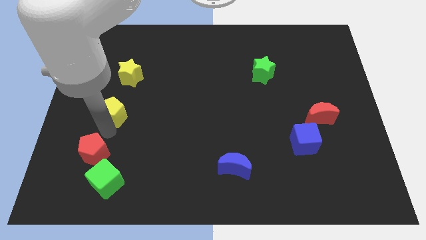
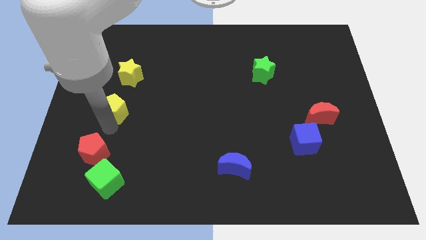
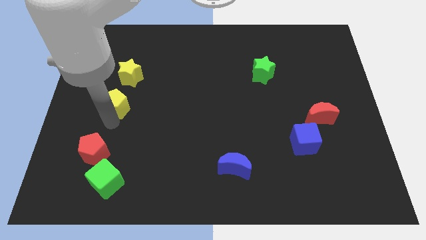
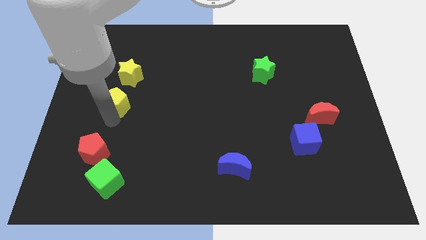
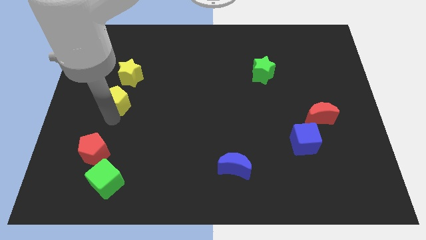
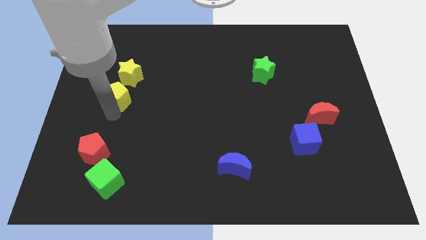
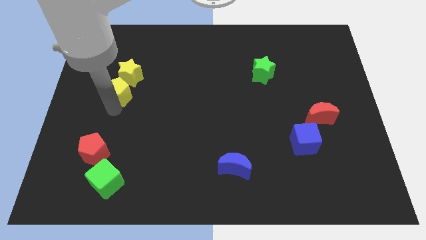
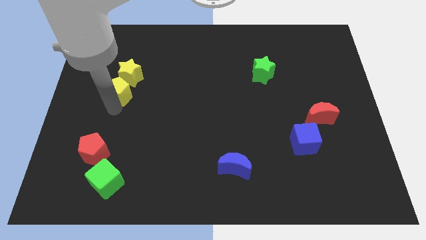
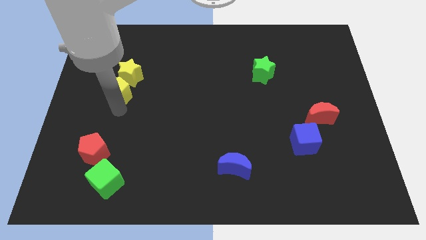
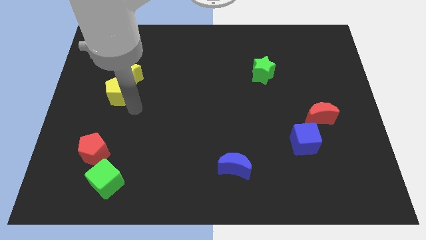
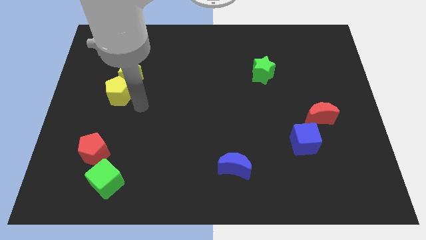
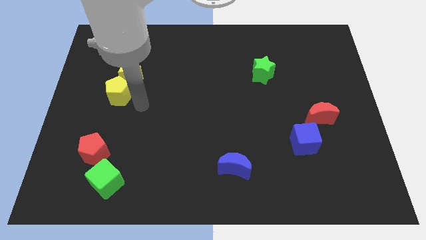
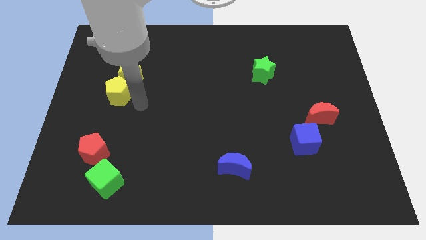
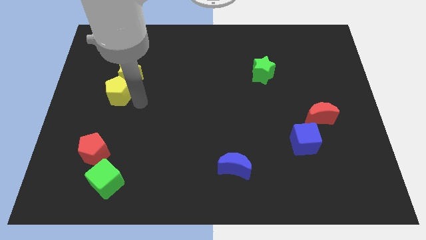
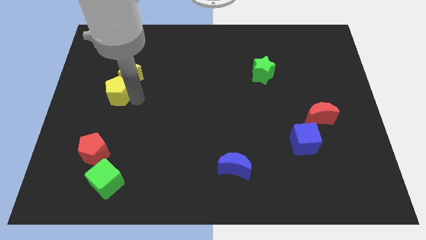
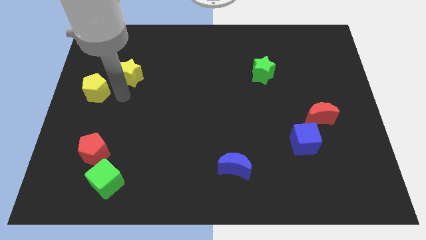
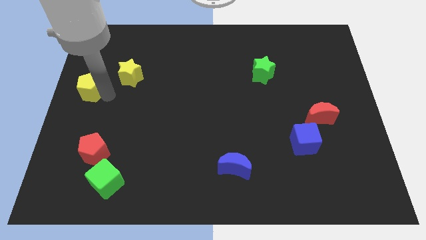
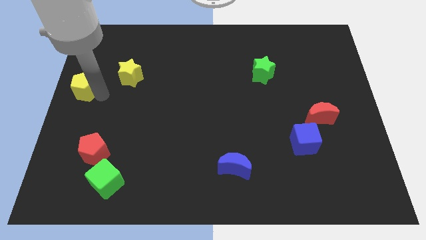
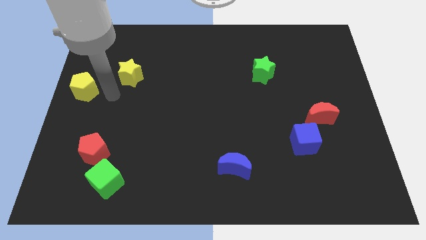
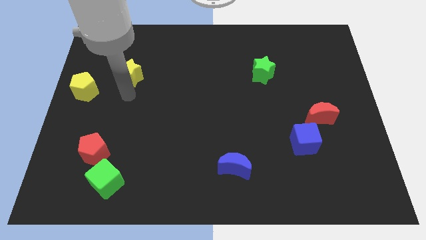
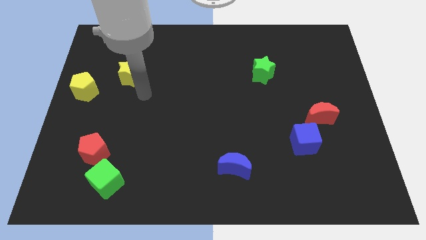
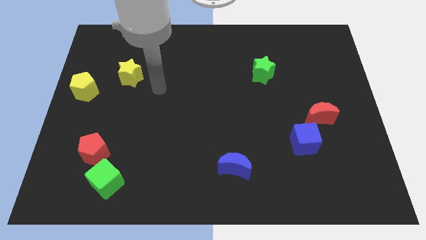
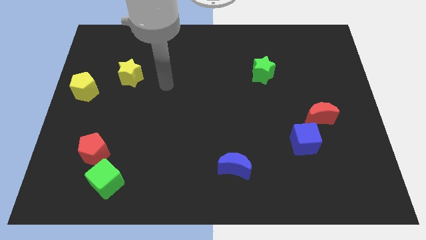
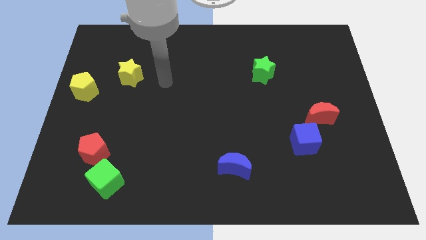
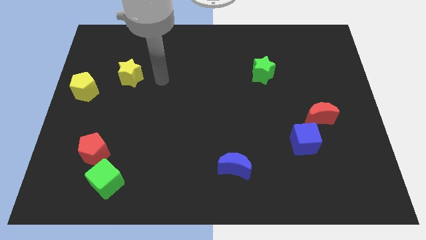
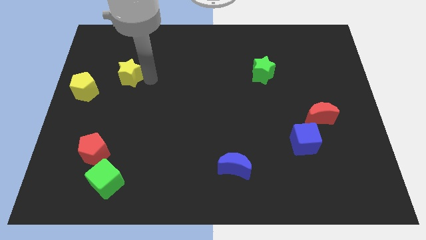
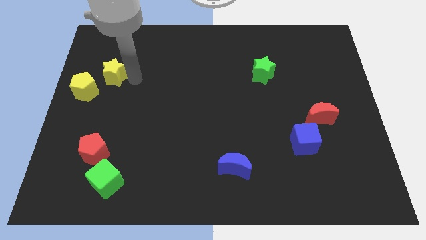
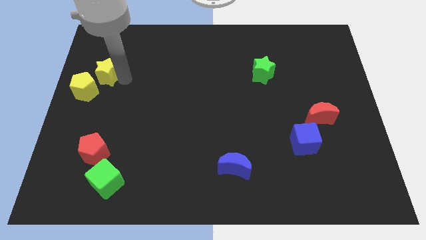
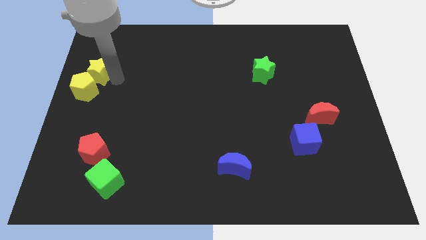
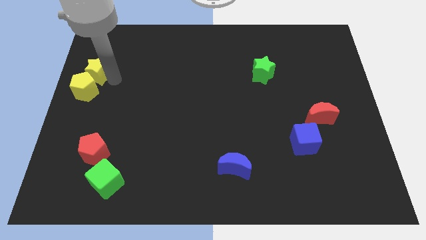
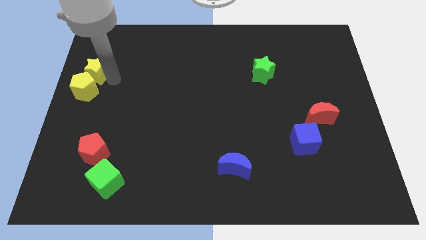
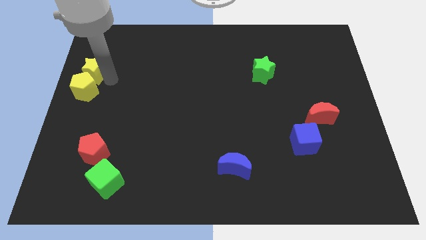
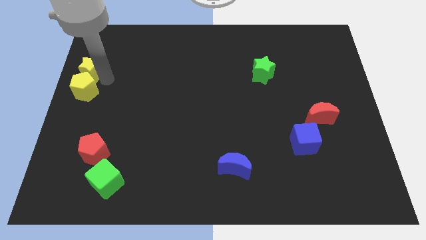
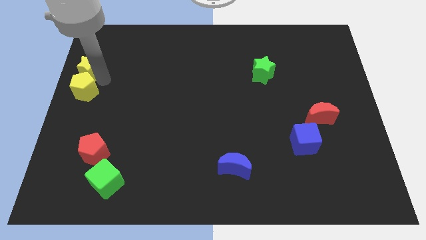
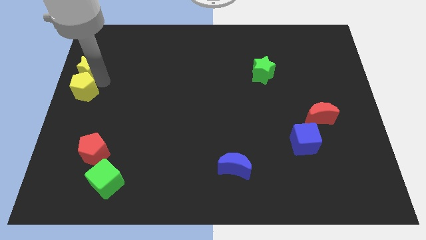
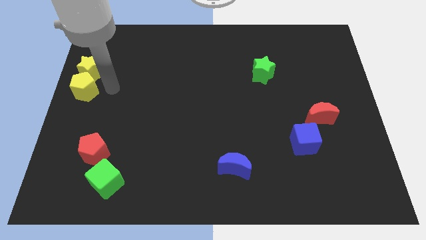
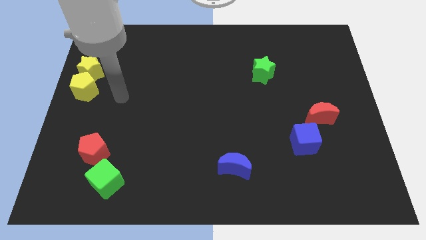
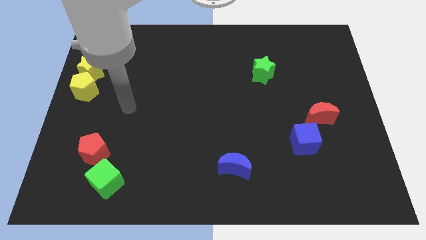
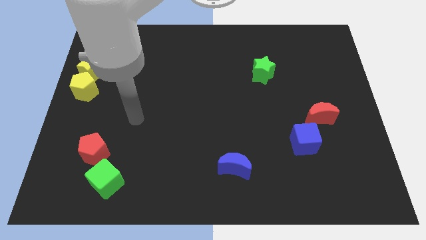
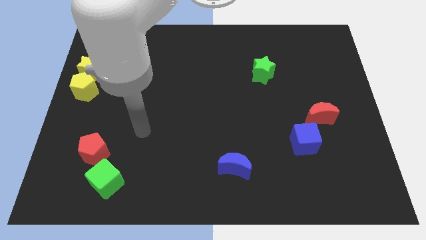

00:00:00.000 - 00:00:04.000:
move yellow blocks at center left

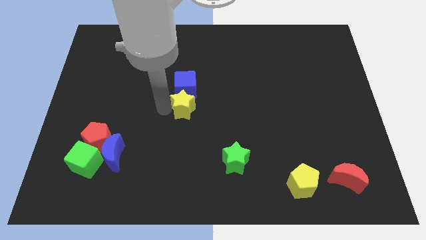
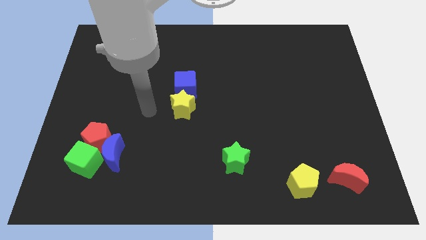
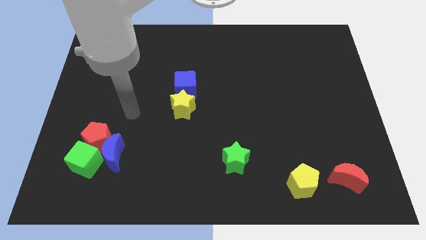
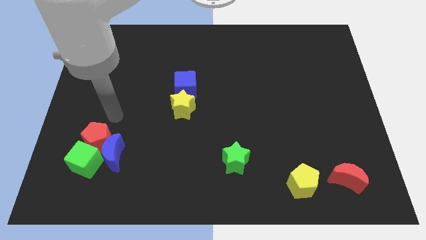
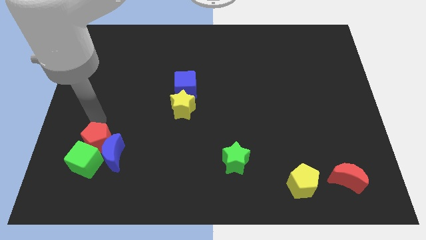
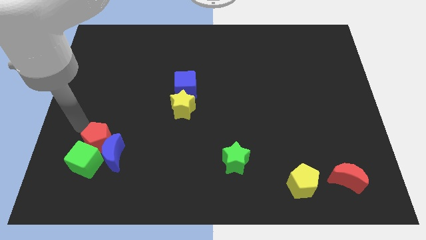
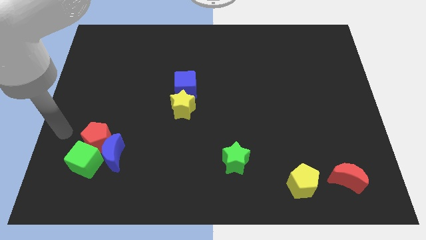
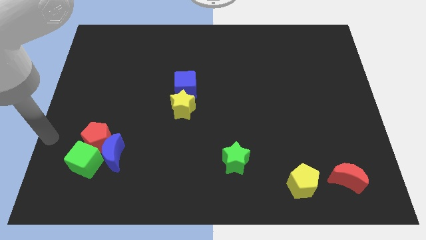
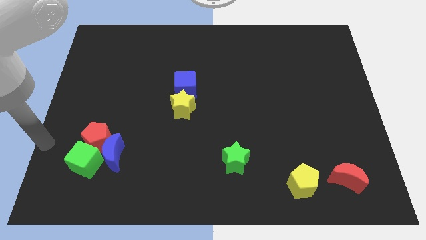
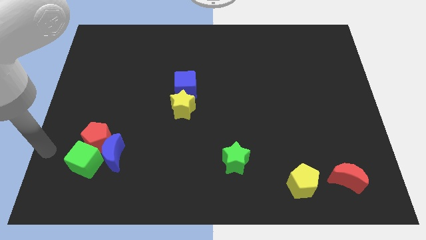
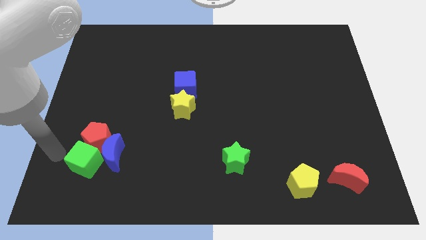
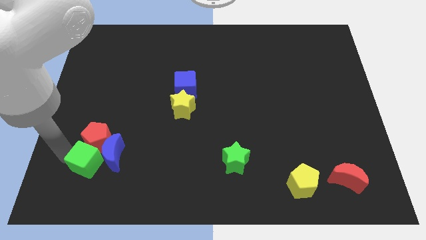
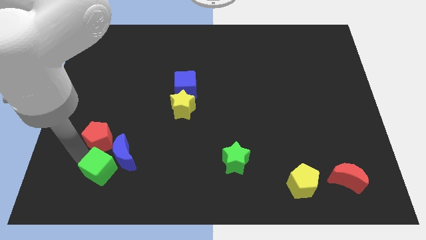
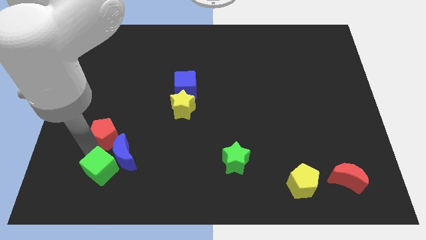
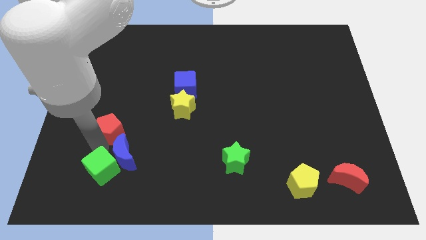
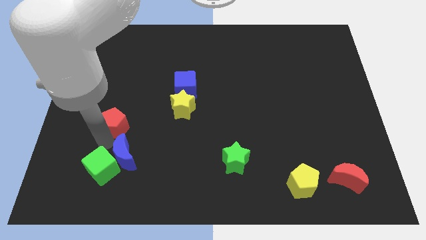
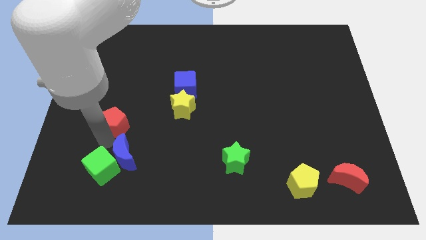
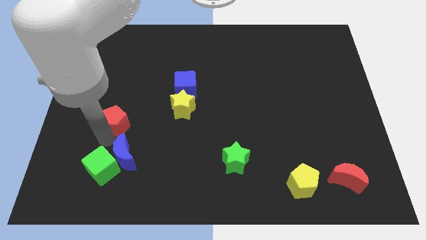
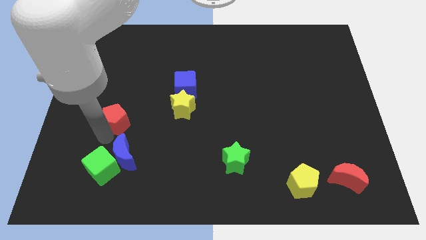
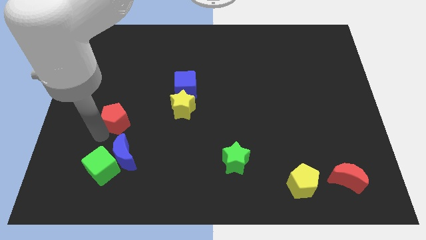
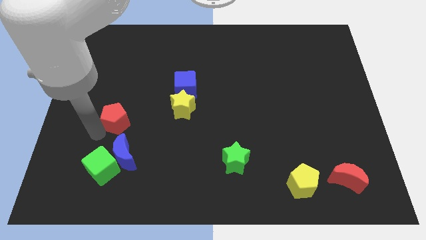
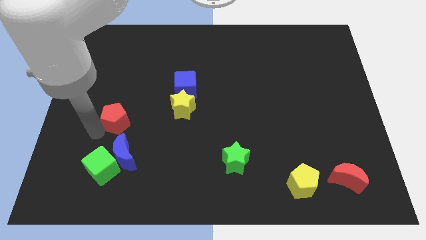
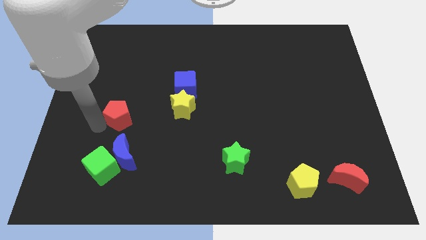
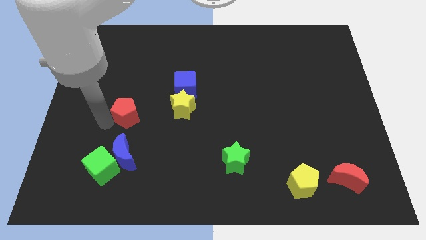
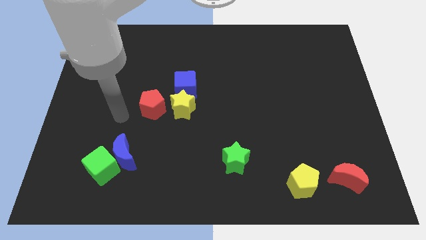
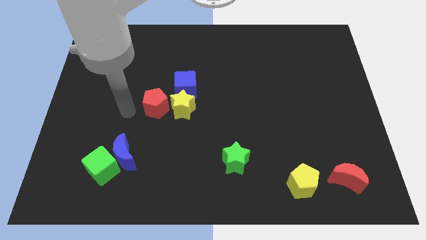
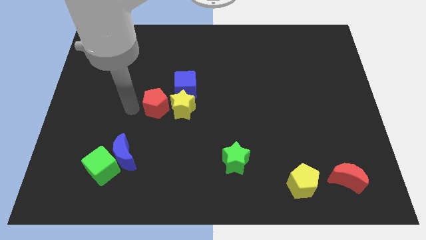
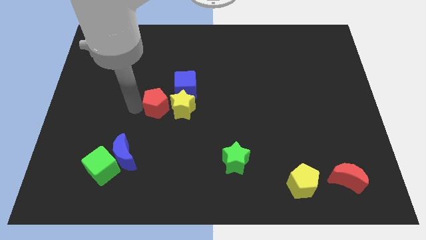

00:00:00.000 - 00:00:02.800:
put the red pentagon to the left side of yellow star

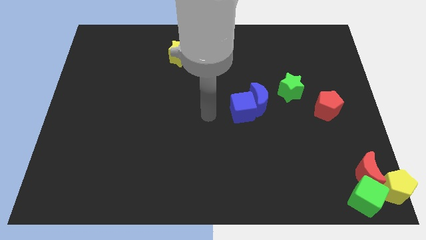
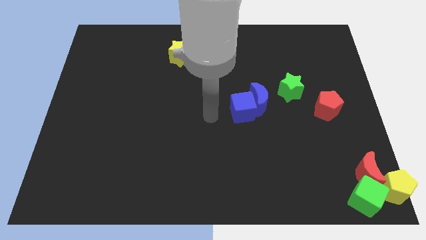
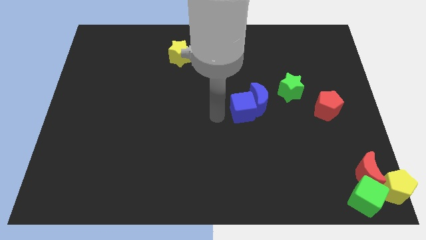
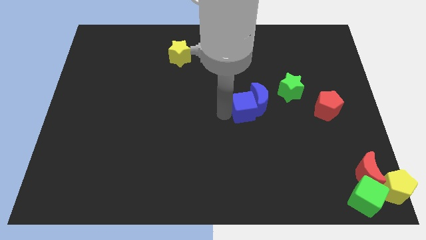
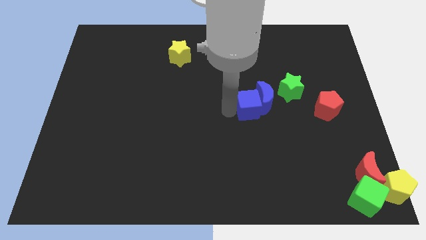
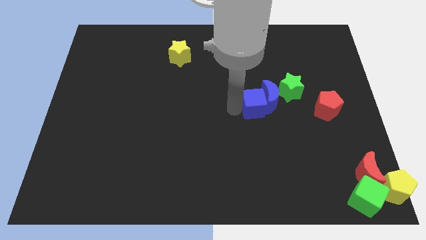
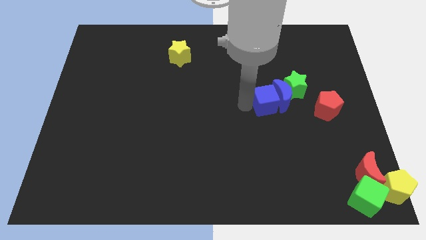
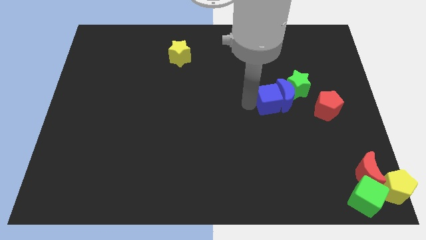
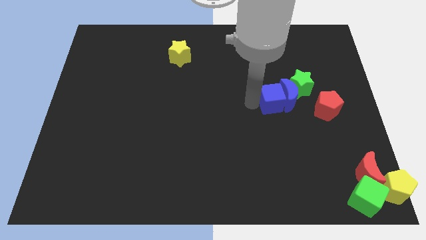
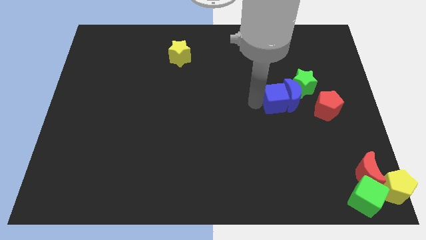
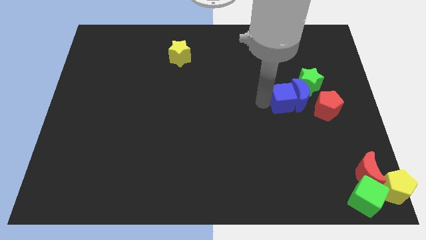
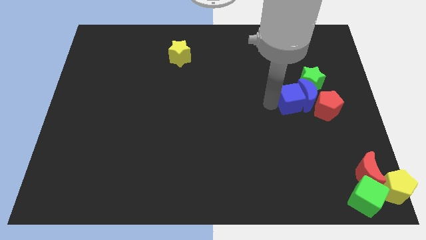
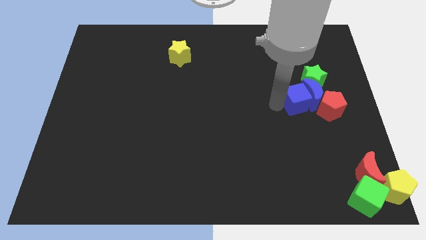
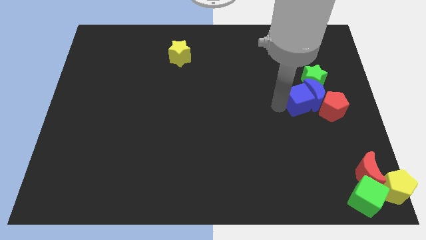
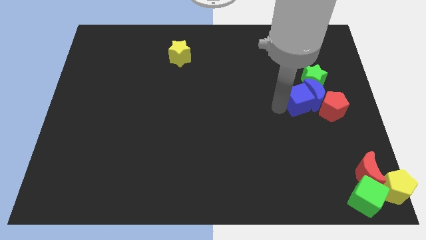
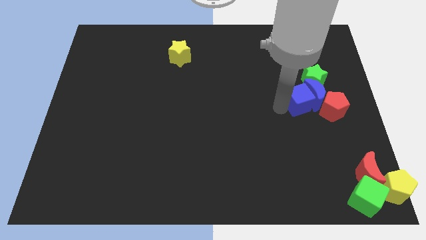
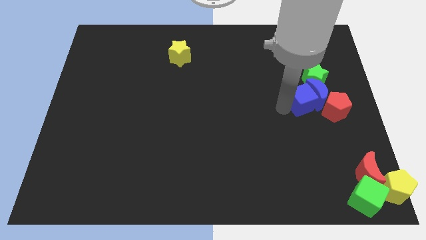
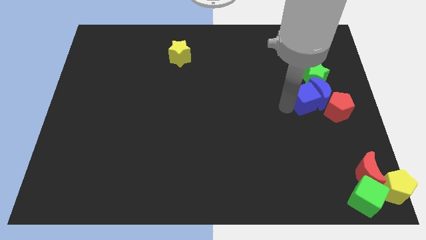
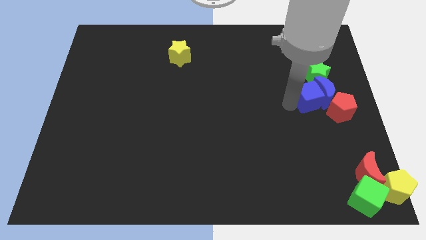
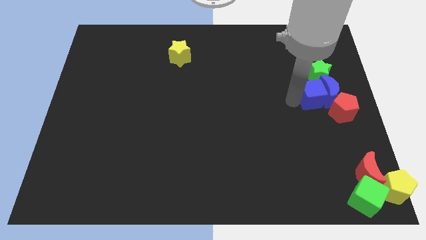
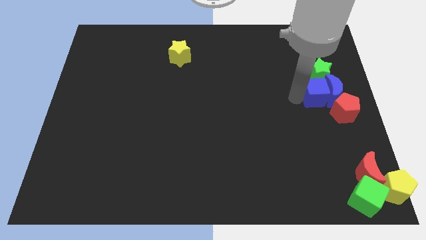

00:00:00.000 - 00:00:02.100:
push the blue crescent in between the green star and red pentagon

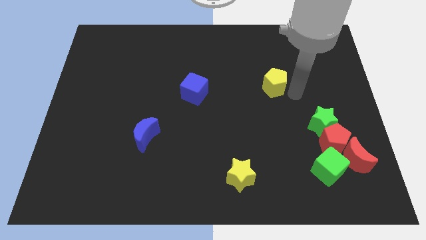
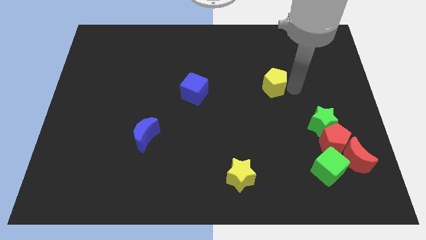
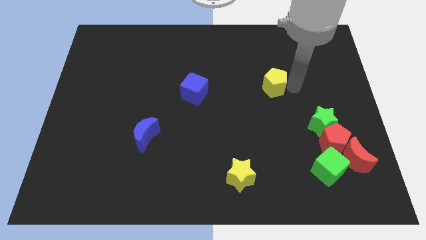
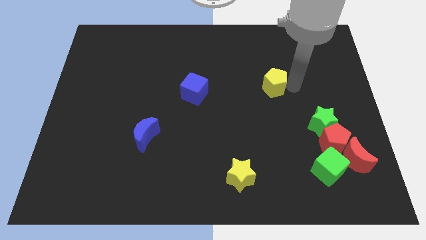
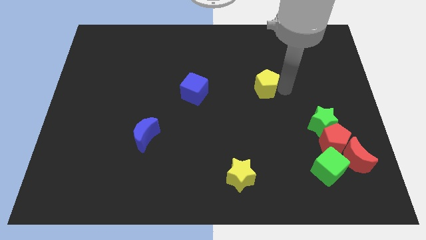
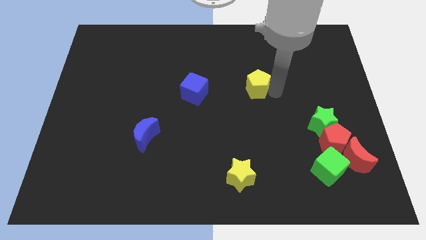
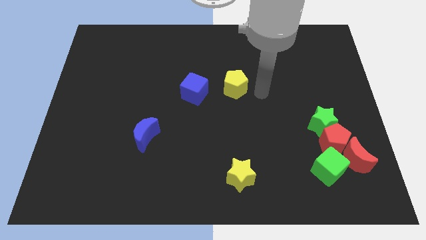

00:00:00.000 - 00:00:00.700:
place yellow pentagon closer to the blue cube
